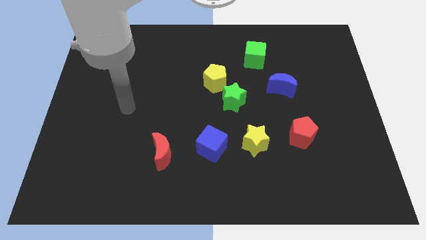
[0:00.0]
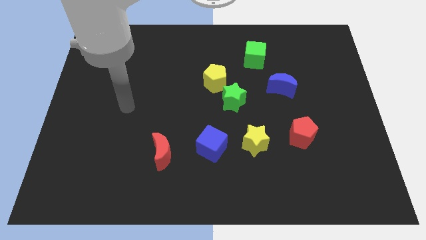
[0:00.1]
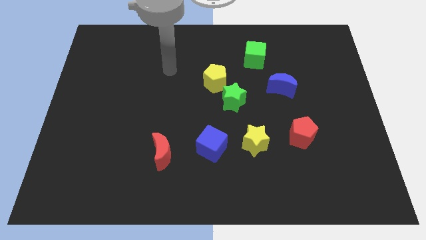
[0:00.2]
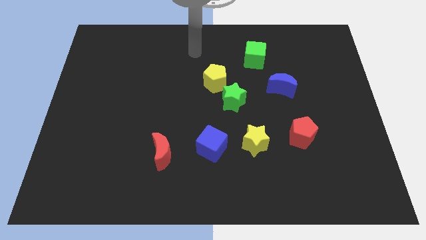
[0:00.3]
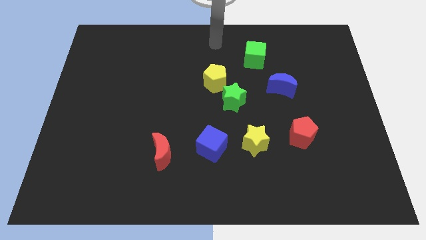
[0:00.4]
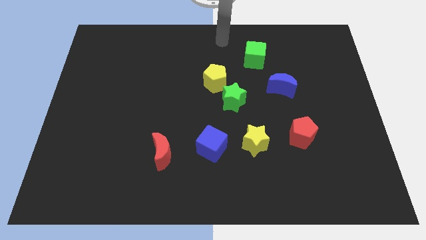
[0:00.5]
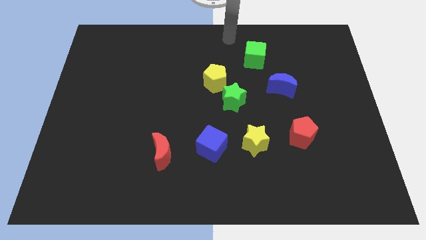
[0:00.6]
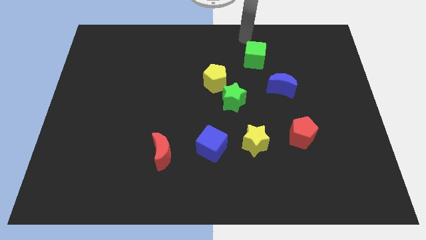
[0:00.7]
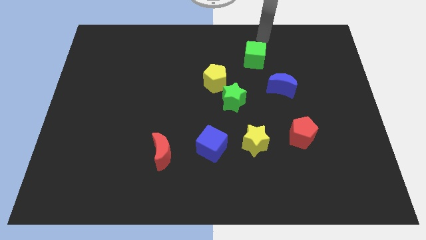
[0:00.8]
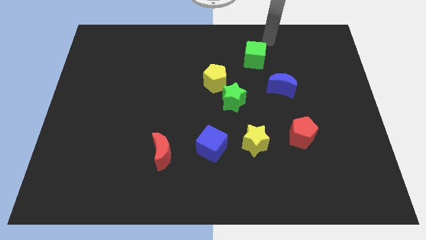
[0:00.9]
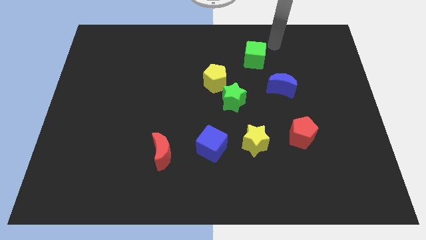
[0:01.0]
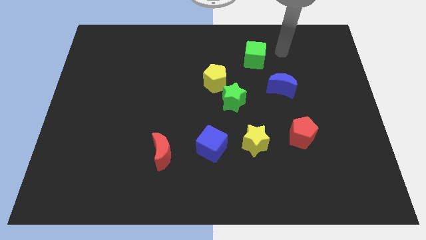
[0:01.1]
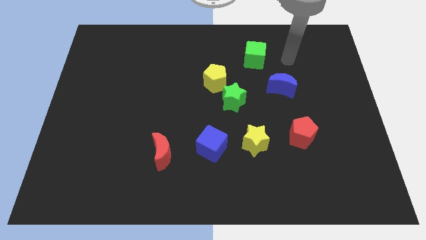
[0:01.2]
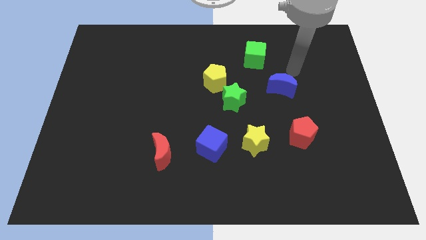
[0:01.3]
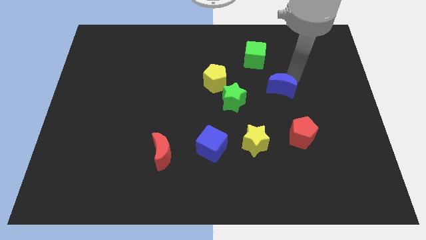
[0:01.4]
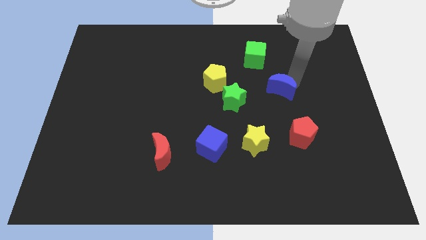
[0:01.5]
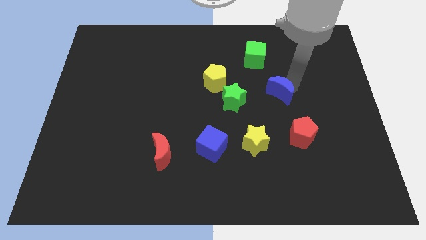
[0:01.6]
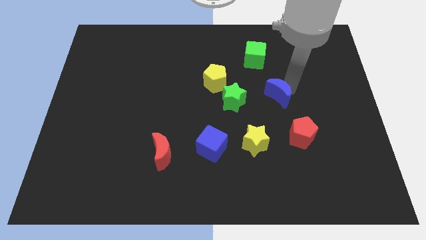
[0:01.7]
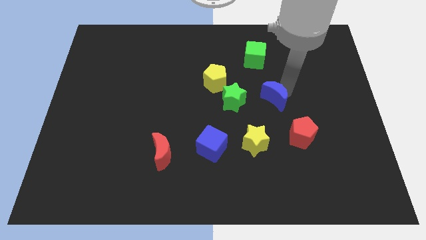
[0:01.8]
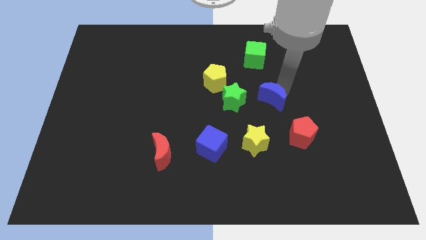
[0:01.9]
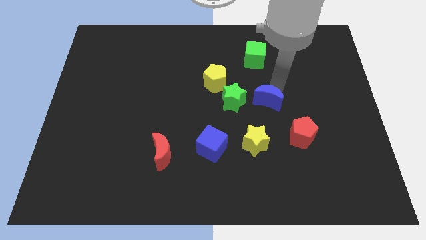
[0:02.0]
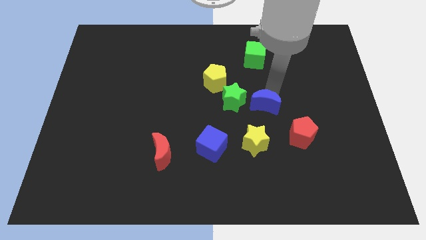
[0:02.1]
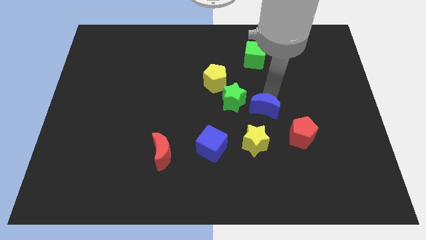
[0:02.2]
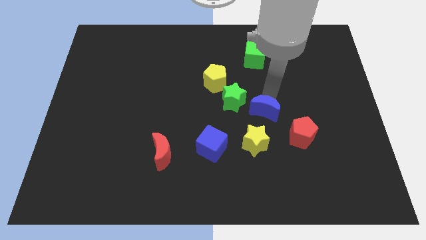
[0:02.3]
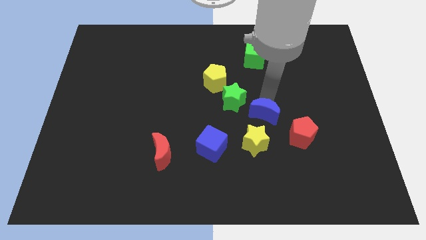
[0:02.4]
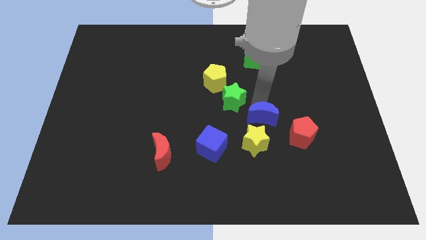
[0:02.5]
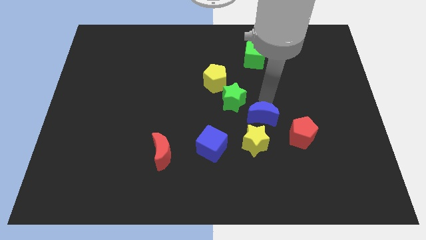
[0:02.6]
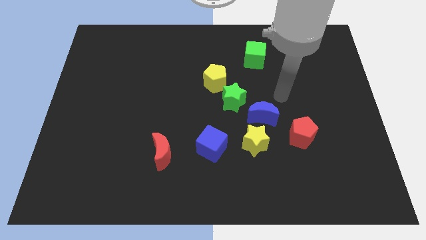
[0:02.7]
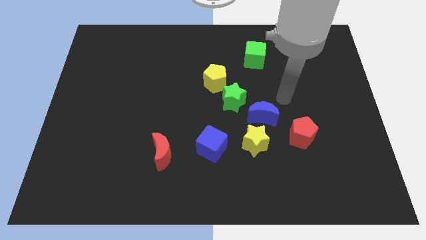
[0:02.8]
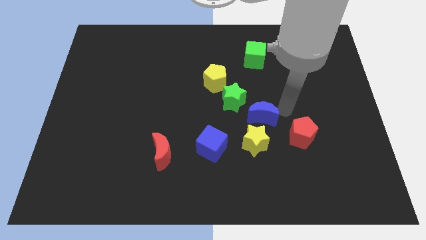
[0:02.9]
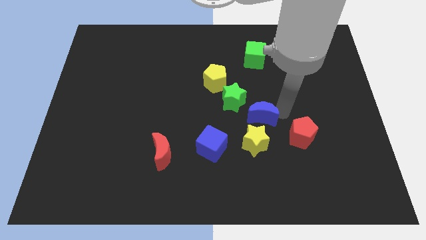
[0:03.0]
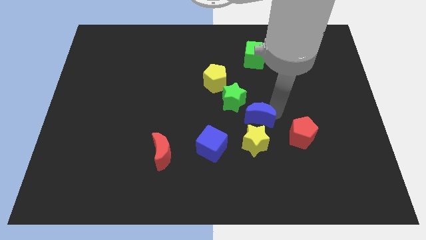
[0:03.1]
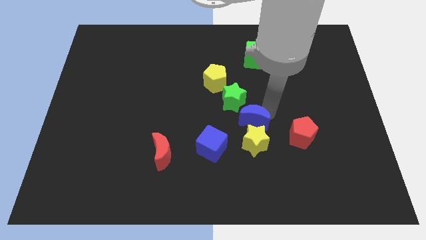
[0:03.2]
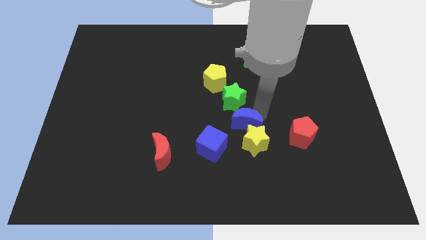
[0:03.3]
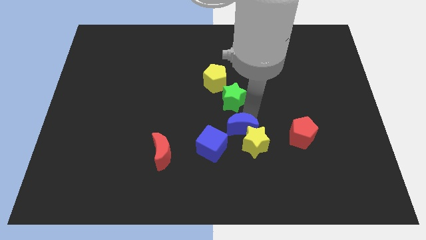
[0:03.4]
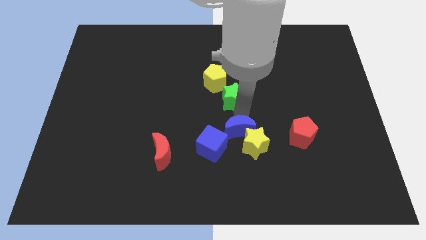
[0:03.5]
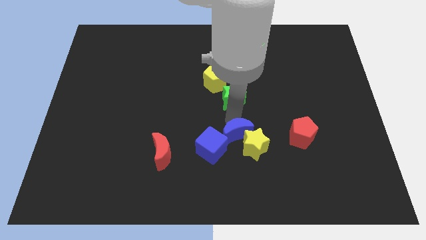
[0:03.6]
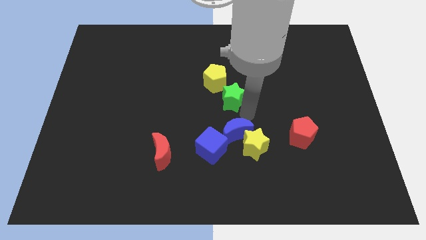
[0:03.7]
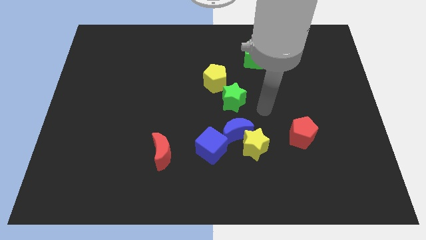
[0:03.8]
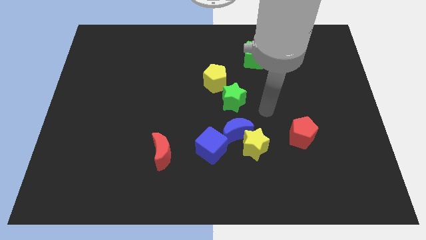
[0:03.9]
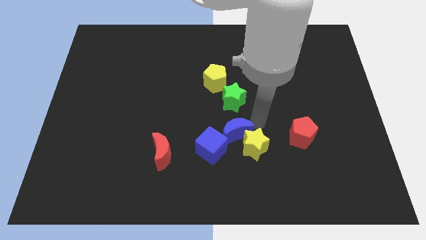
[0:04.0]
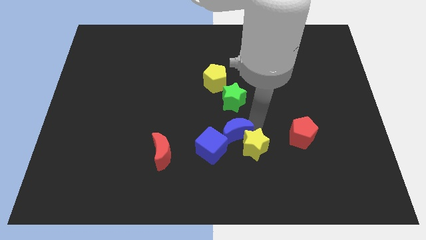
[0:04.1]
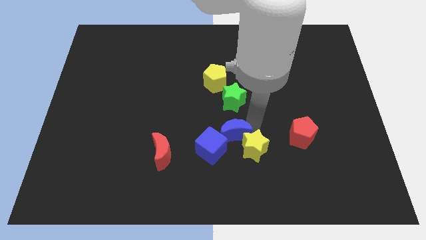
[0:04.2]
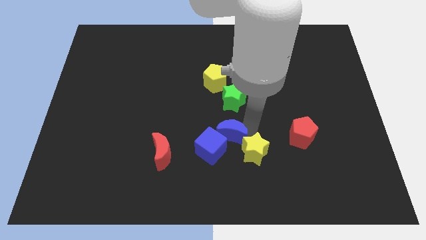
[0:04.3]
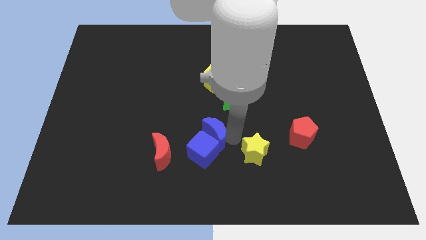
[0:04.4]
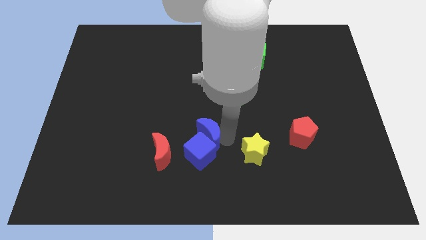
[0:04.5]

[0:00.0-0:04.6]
push the blue moon towards the blue cube

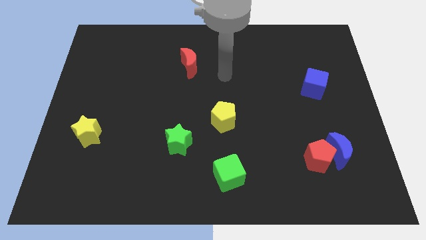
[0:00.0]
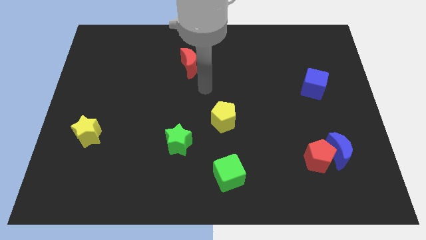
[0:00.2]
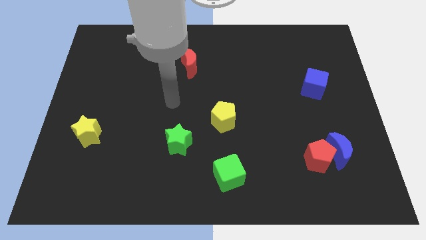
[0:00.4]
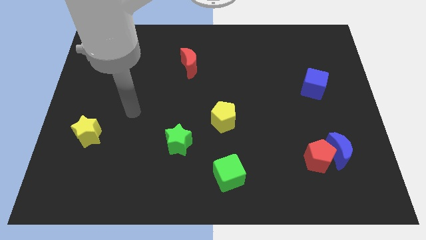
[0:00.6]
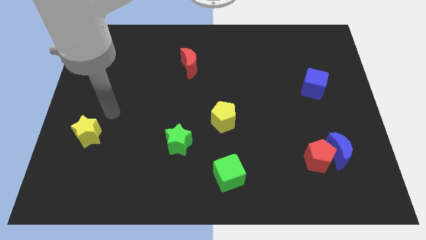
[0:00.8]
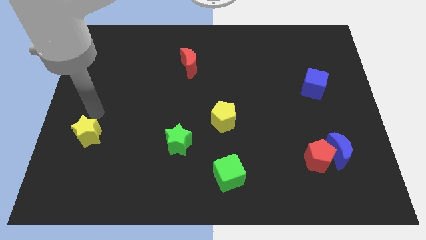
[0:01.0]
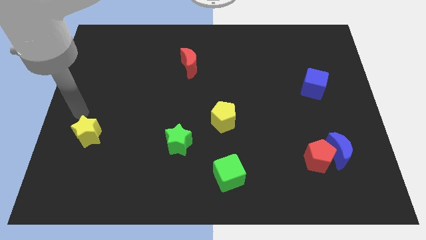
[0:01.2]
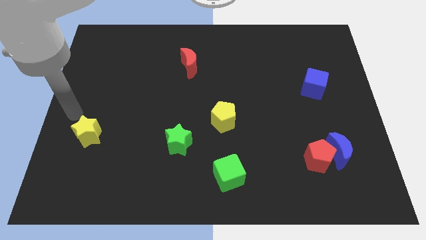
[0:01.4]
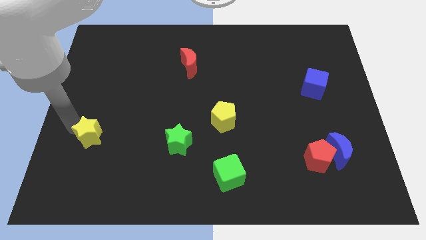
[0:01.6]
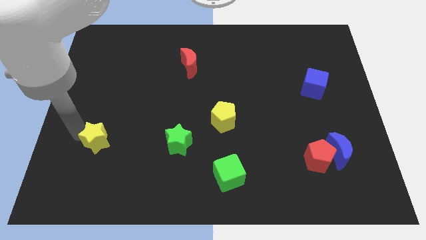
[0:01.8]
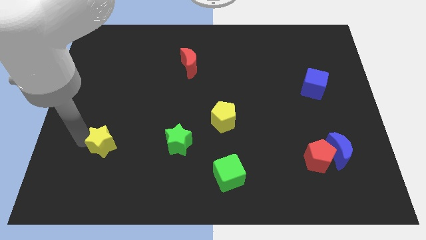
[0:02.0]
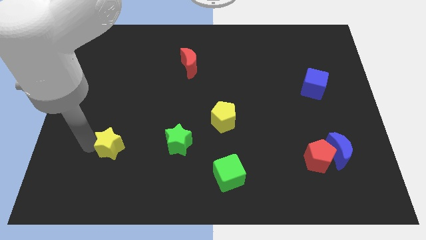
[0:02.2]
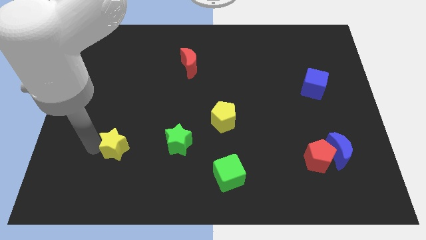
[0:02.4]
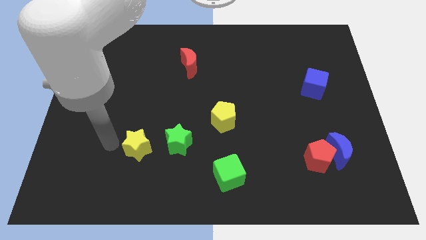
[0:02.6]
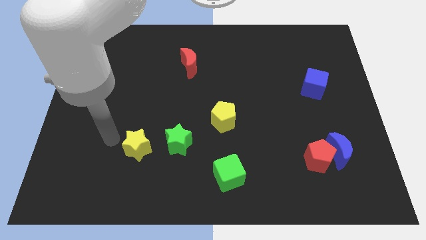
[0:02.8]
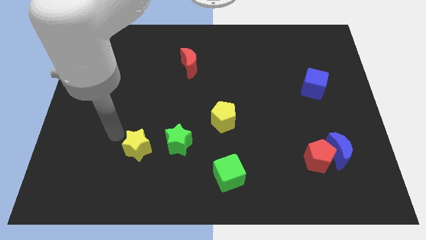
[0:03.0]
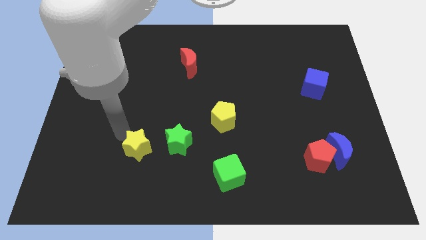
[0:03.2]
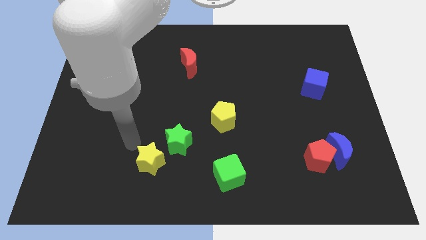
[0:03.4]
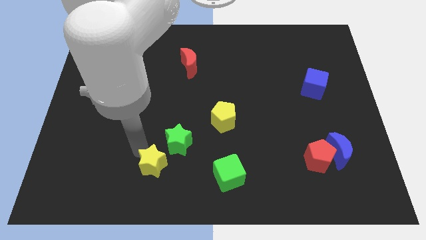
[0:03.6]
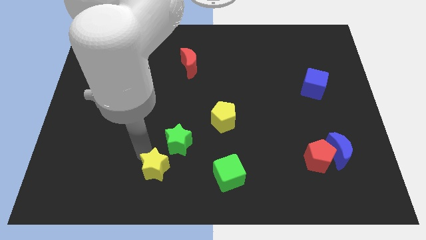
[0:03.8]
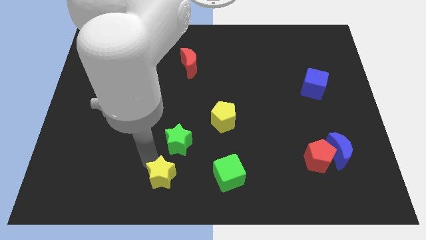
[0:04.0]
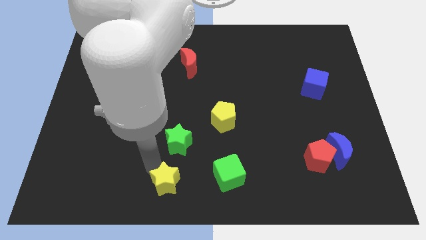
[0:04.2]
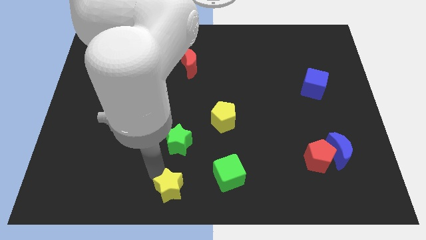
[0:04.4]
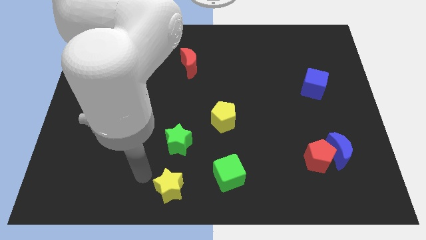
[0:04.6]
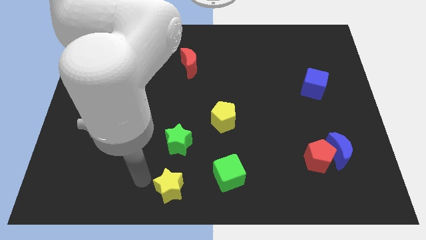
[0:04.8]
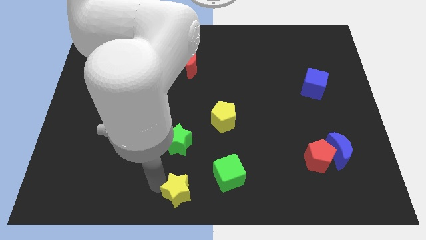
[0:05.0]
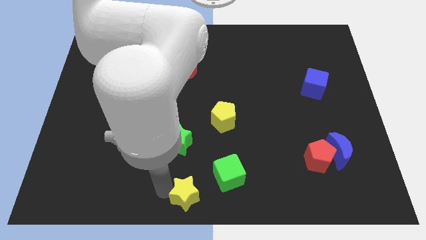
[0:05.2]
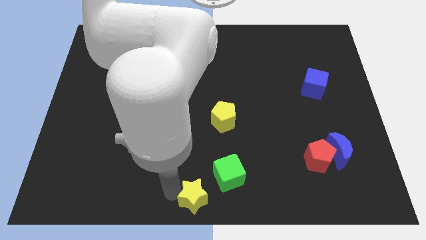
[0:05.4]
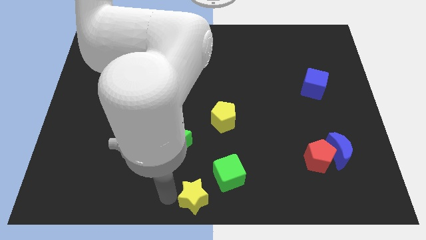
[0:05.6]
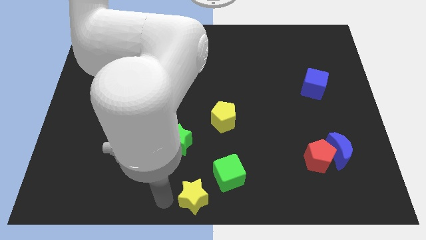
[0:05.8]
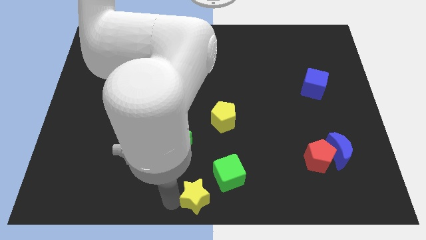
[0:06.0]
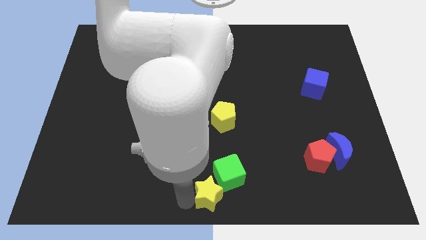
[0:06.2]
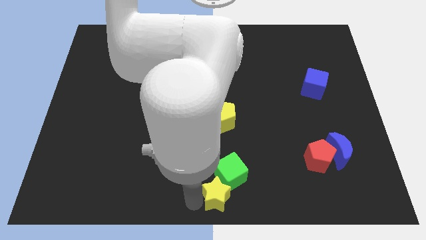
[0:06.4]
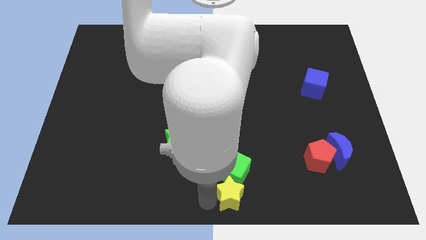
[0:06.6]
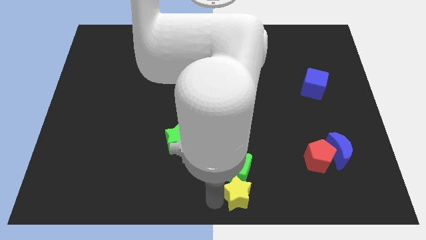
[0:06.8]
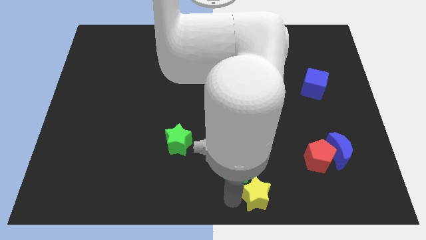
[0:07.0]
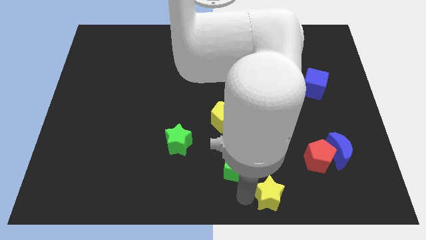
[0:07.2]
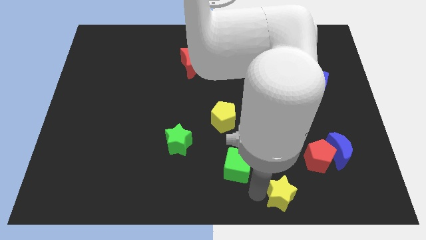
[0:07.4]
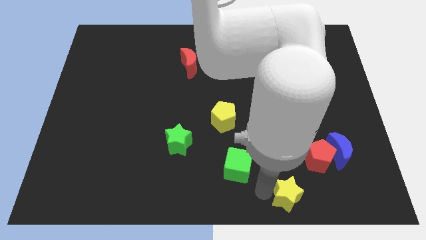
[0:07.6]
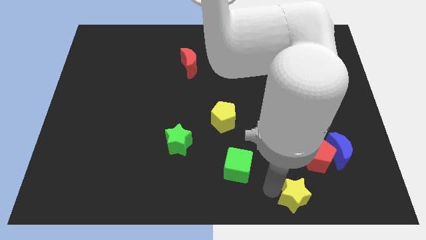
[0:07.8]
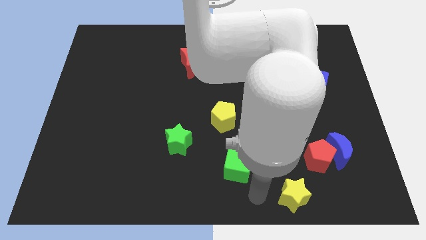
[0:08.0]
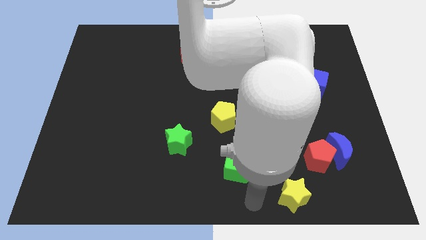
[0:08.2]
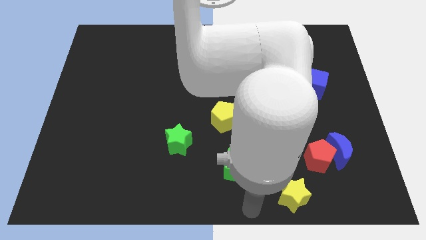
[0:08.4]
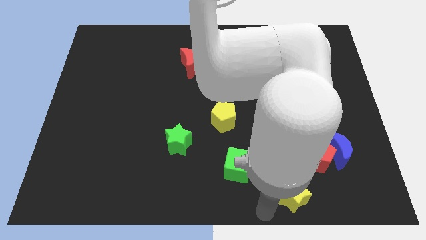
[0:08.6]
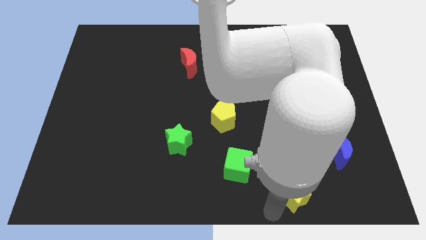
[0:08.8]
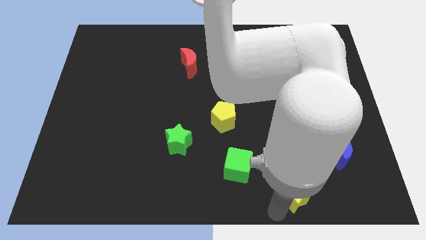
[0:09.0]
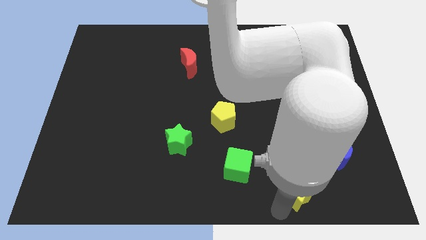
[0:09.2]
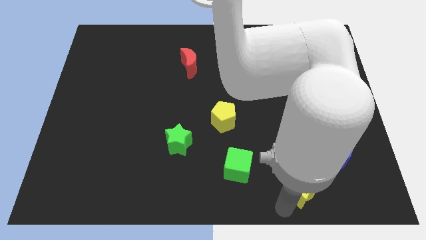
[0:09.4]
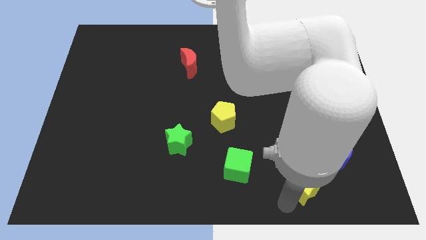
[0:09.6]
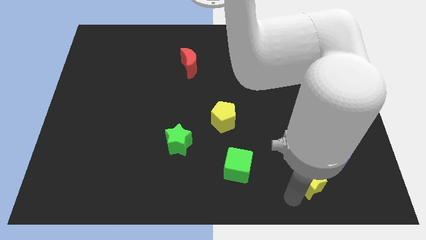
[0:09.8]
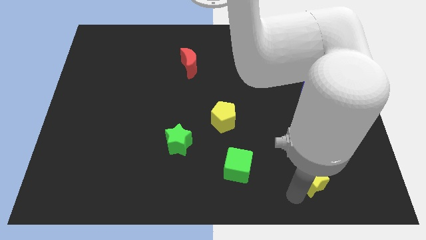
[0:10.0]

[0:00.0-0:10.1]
slide the yellow star towards the red pentagon
